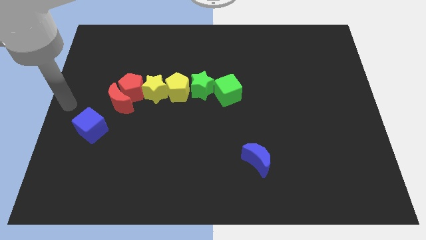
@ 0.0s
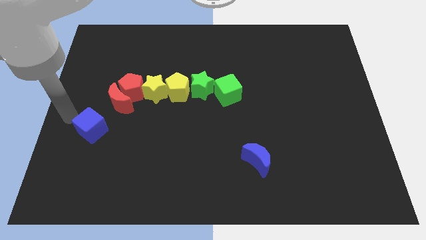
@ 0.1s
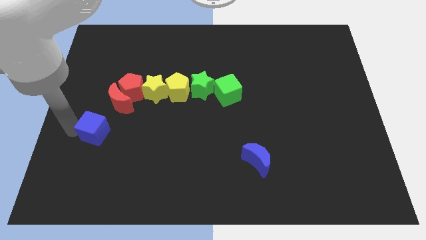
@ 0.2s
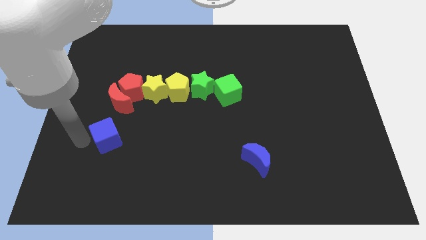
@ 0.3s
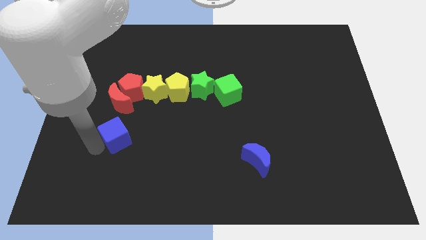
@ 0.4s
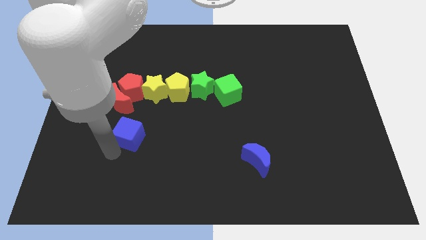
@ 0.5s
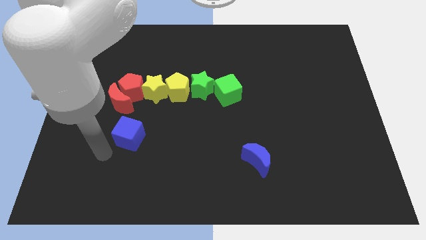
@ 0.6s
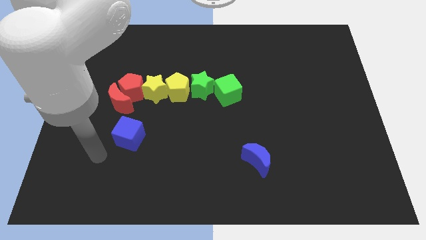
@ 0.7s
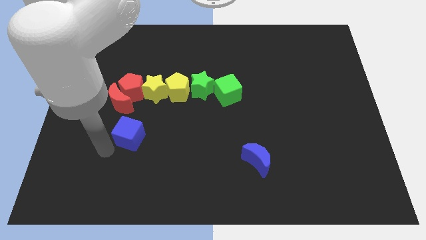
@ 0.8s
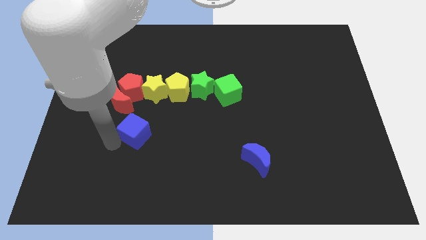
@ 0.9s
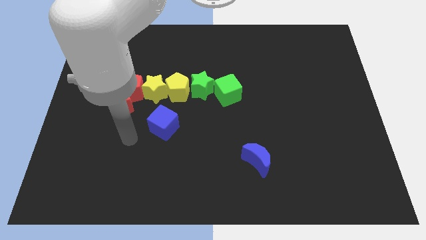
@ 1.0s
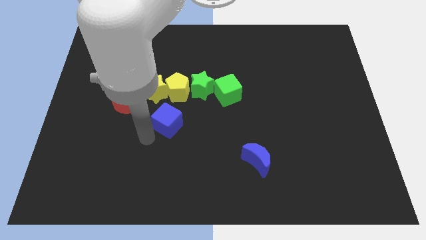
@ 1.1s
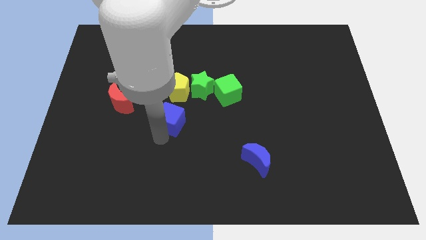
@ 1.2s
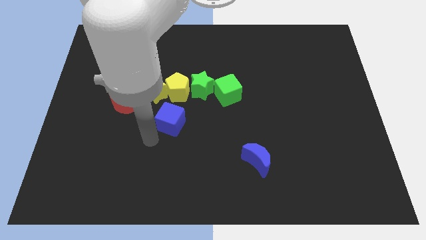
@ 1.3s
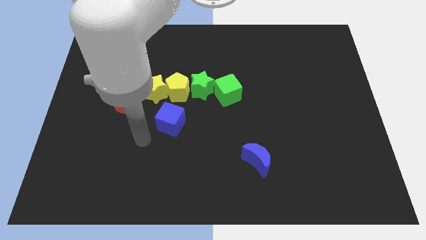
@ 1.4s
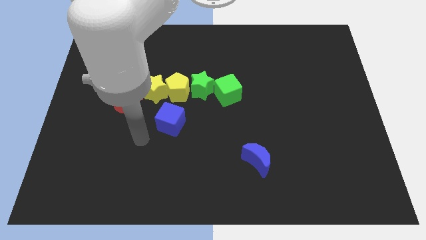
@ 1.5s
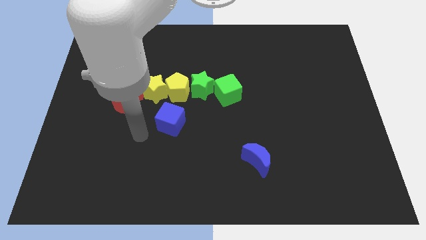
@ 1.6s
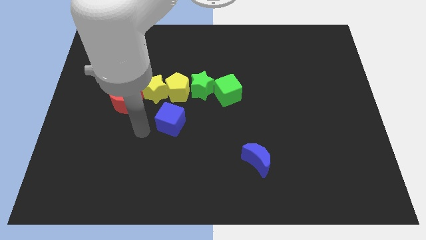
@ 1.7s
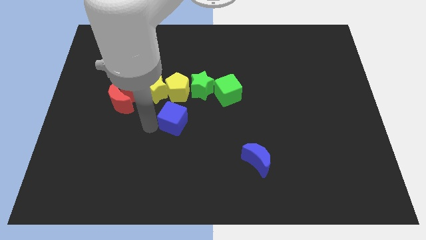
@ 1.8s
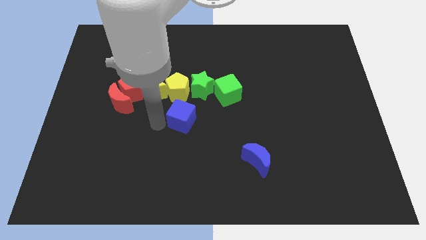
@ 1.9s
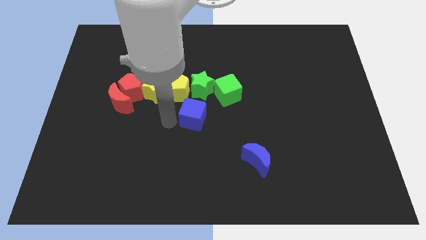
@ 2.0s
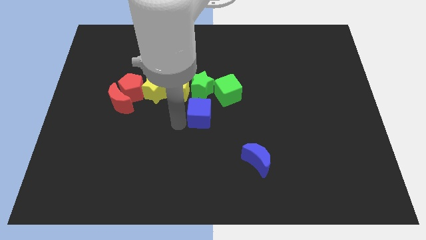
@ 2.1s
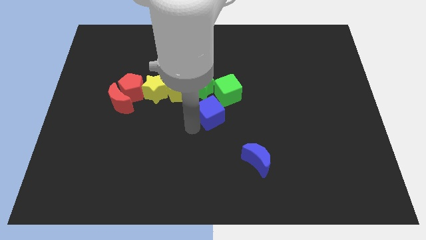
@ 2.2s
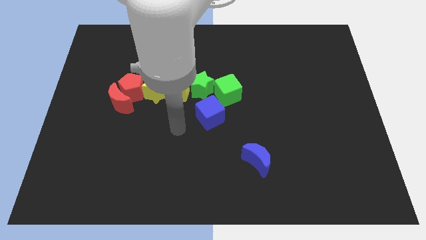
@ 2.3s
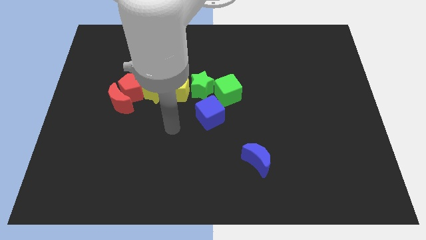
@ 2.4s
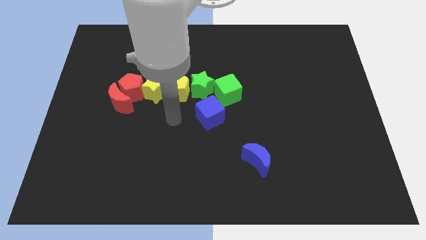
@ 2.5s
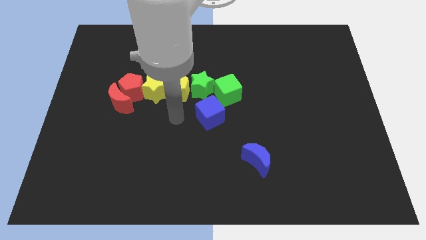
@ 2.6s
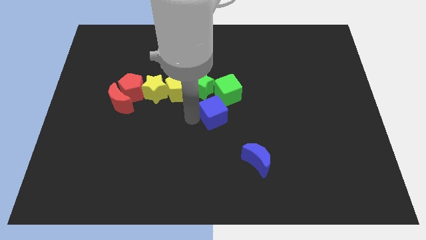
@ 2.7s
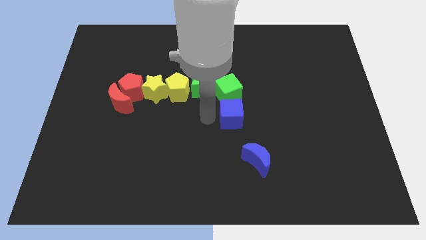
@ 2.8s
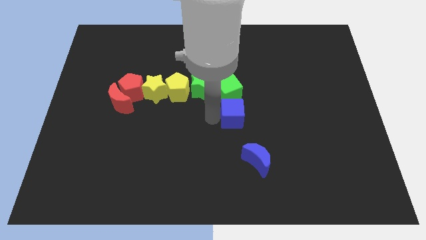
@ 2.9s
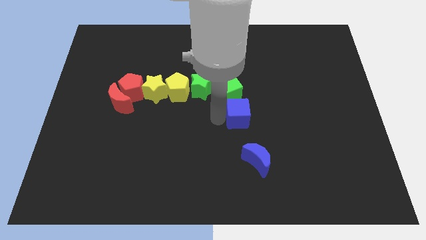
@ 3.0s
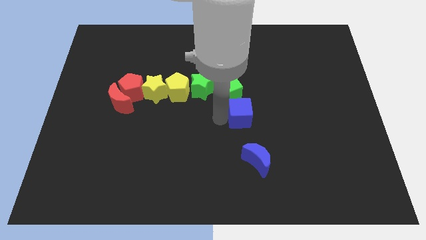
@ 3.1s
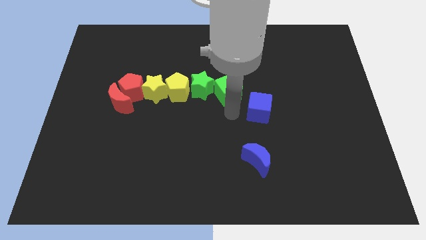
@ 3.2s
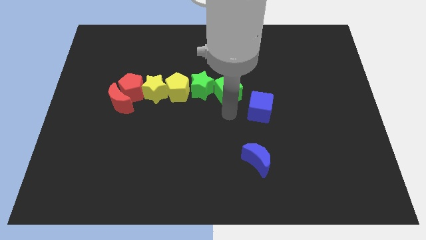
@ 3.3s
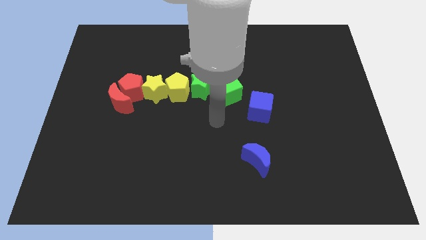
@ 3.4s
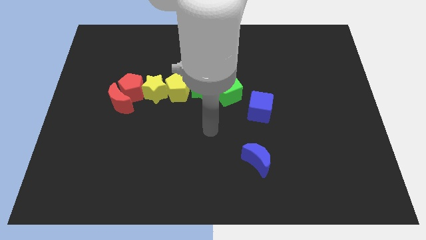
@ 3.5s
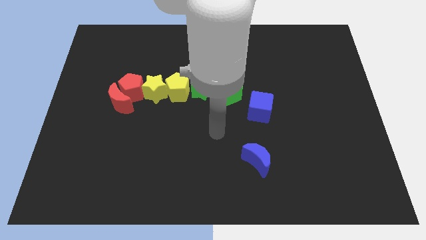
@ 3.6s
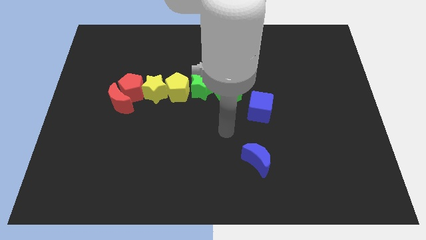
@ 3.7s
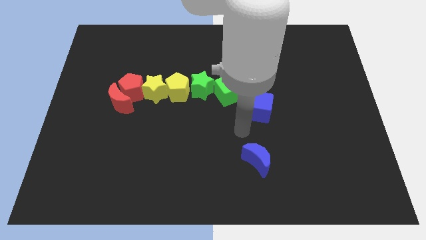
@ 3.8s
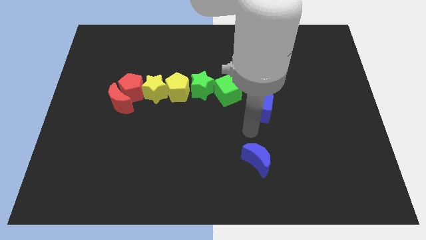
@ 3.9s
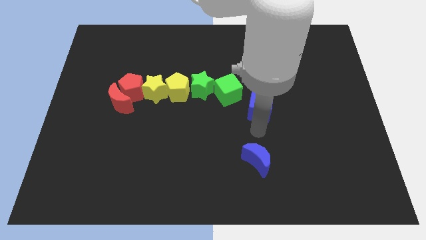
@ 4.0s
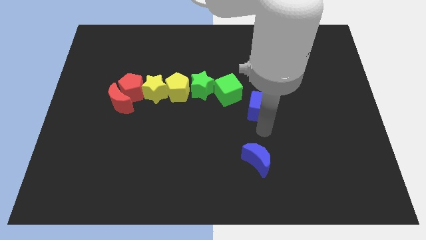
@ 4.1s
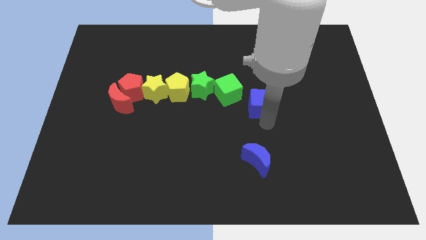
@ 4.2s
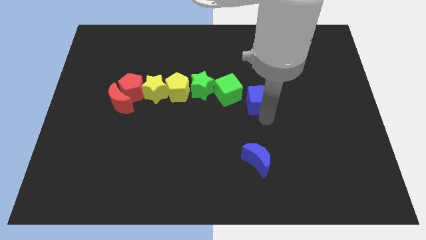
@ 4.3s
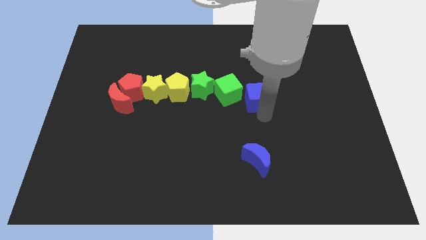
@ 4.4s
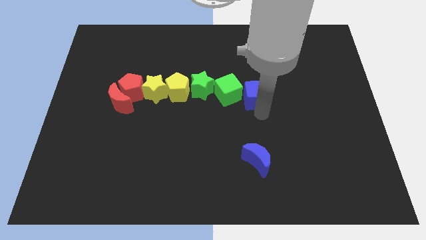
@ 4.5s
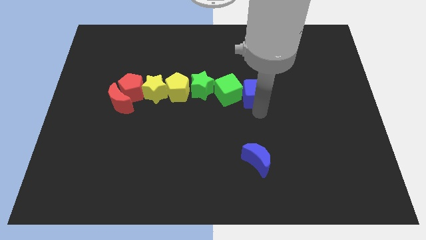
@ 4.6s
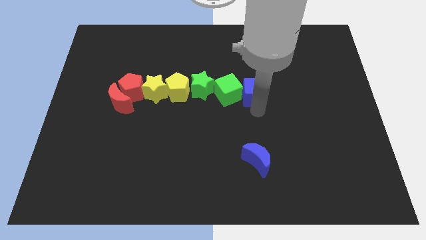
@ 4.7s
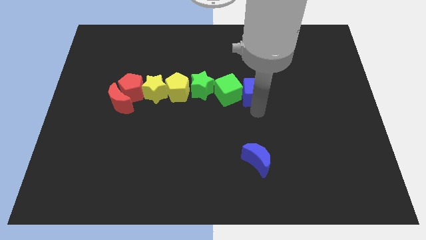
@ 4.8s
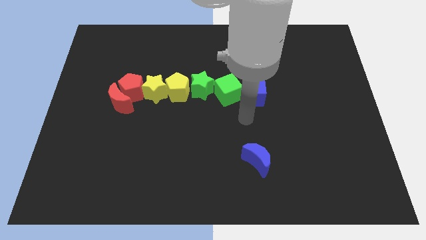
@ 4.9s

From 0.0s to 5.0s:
move the blue cube into the right isde of the green cube

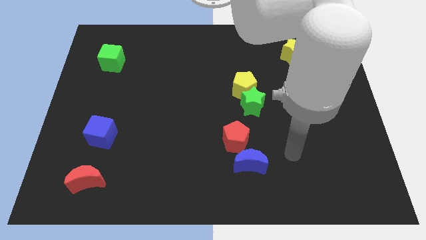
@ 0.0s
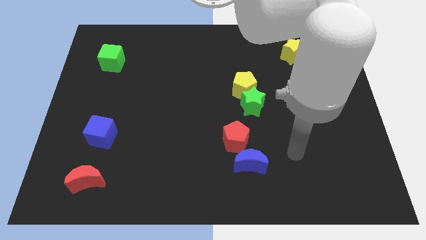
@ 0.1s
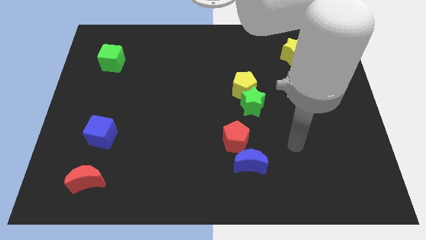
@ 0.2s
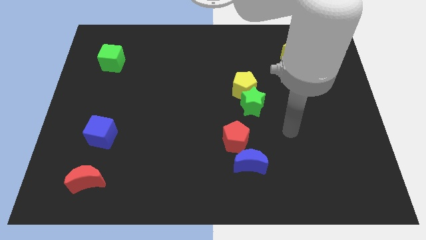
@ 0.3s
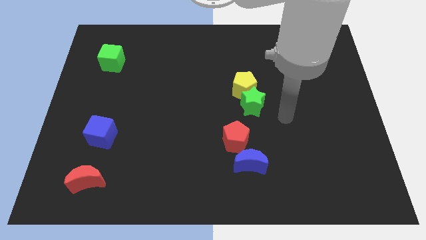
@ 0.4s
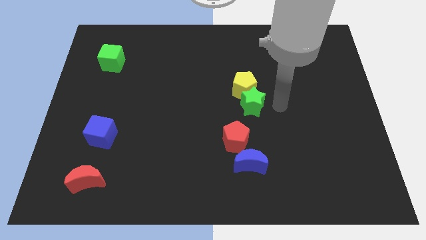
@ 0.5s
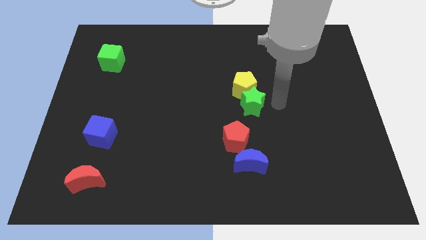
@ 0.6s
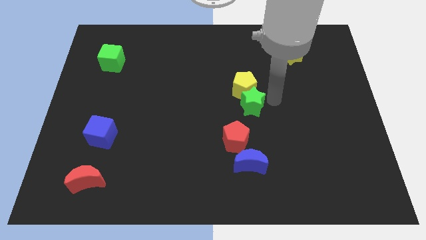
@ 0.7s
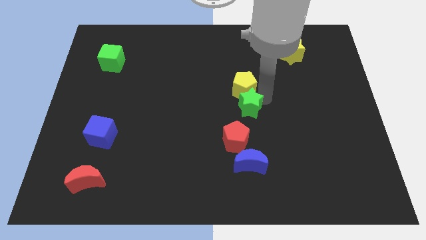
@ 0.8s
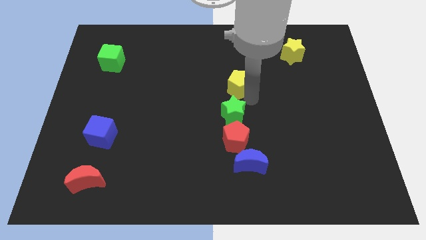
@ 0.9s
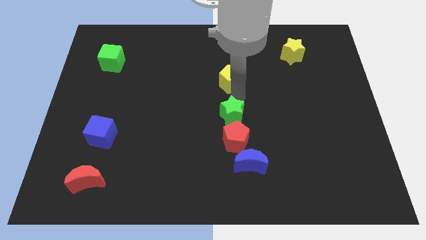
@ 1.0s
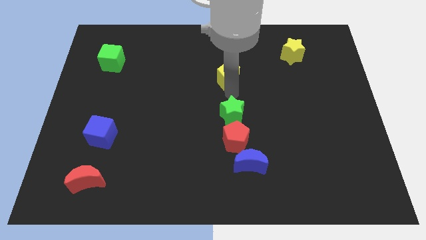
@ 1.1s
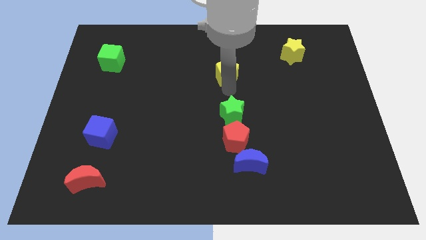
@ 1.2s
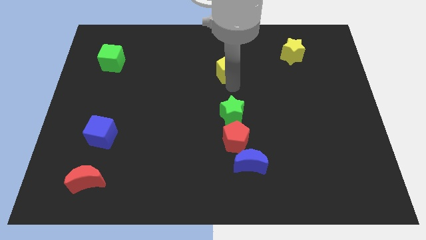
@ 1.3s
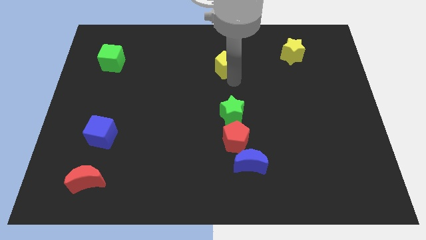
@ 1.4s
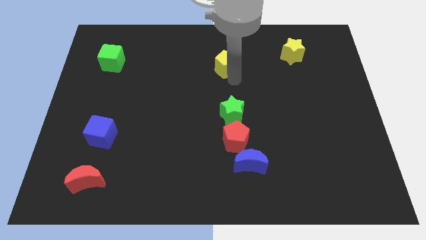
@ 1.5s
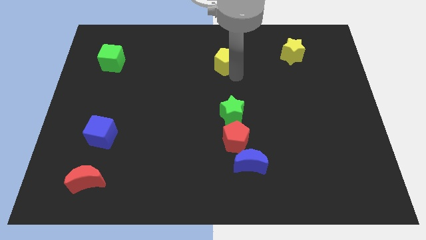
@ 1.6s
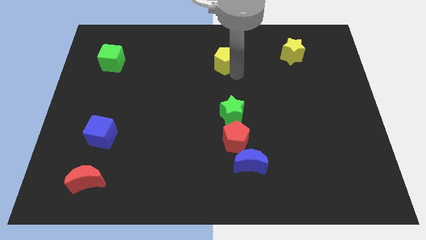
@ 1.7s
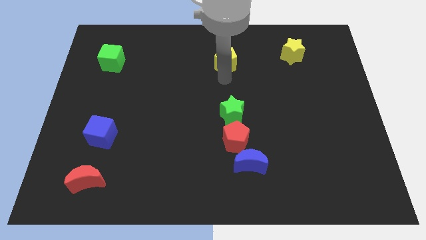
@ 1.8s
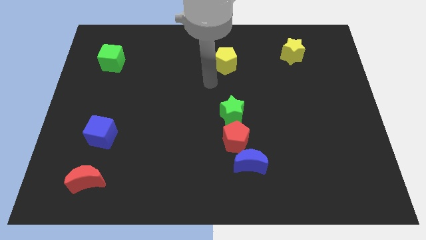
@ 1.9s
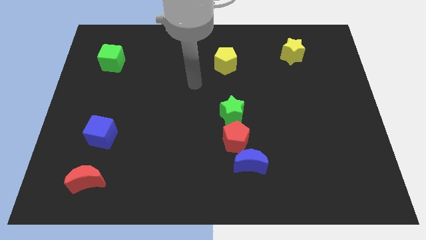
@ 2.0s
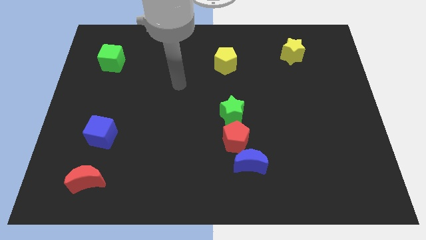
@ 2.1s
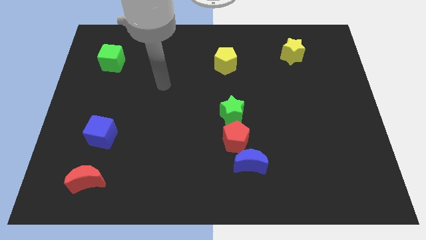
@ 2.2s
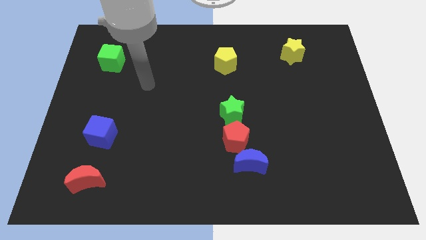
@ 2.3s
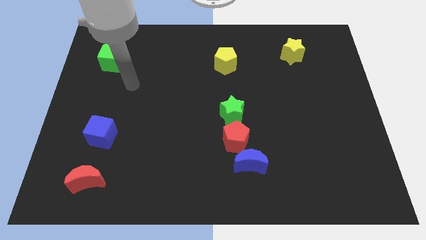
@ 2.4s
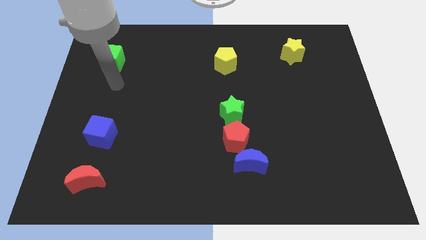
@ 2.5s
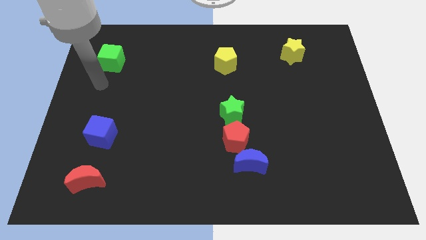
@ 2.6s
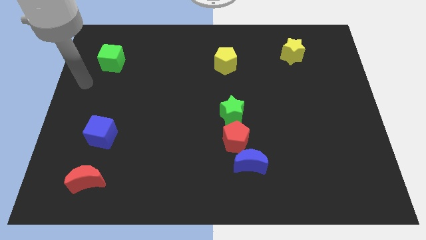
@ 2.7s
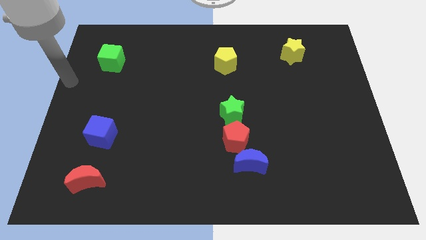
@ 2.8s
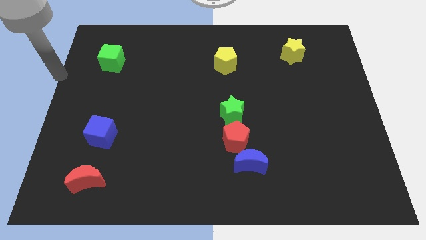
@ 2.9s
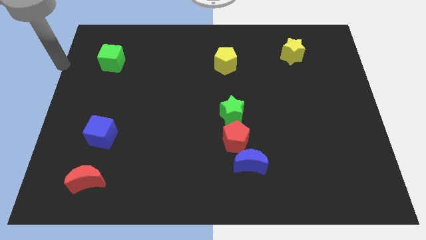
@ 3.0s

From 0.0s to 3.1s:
separate the yellow pentagon with the green star to the top

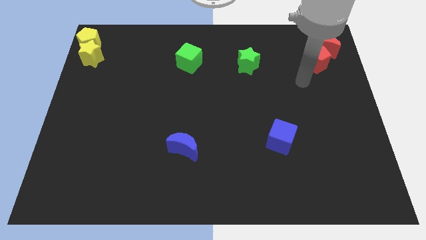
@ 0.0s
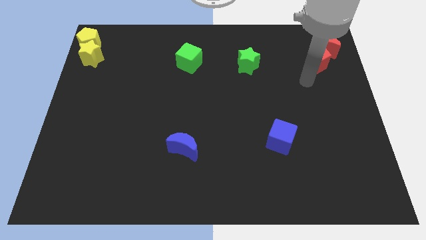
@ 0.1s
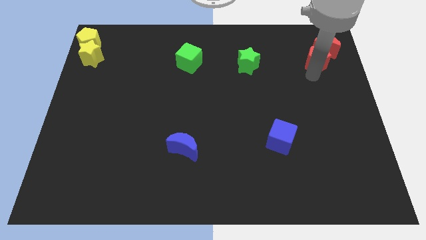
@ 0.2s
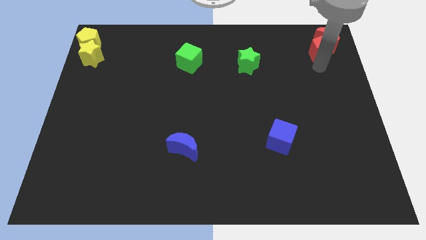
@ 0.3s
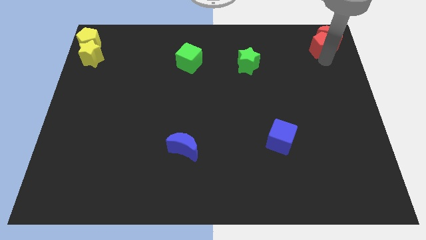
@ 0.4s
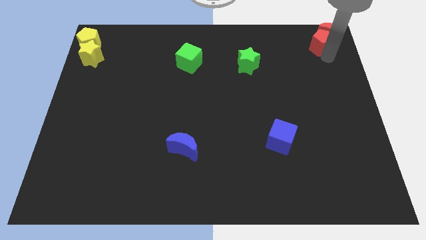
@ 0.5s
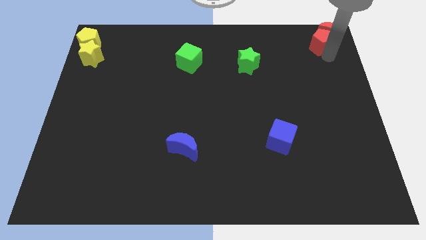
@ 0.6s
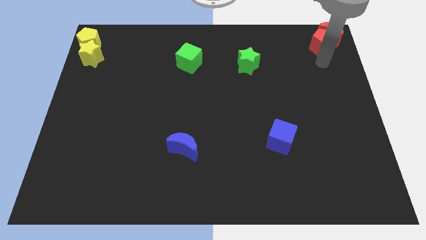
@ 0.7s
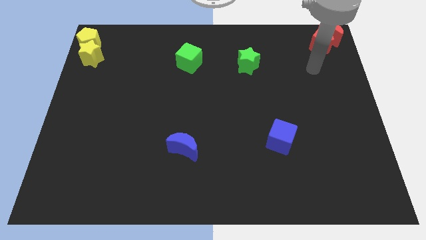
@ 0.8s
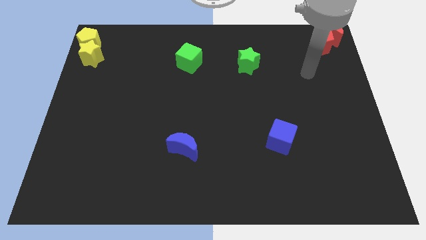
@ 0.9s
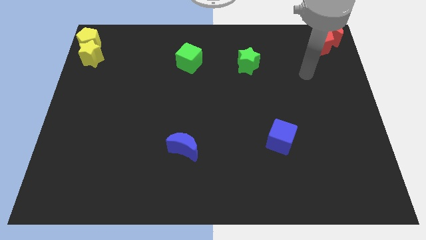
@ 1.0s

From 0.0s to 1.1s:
push the red moon to the top right corner with the red pentagon
